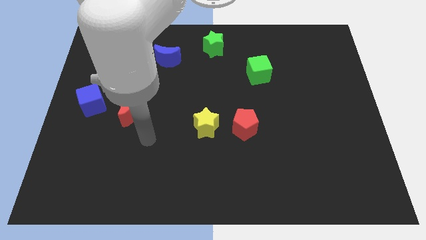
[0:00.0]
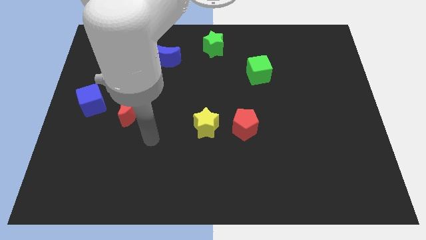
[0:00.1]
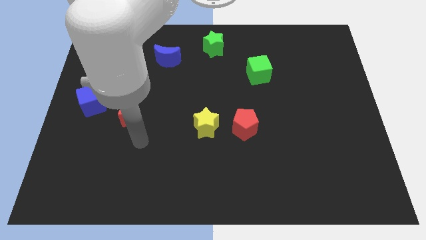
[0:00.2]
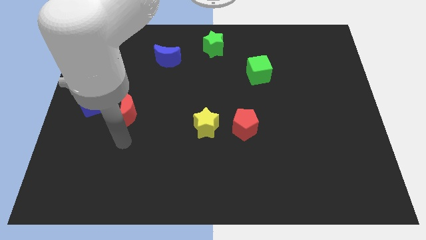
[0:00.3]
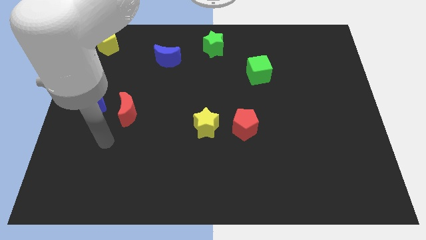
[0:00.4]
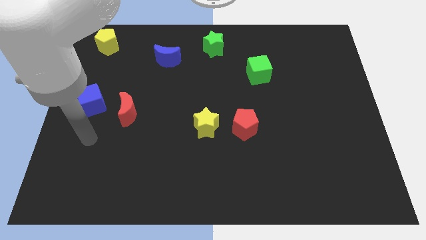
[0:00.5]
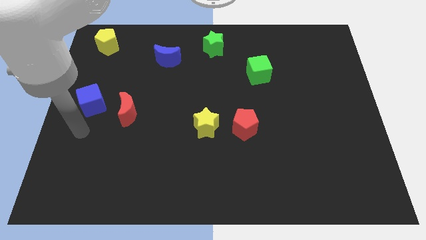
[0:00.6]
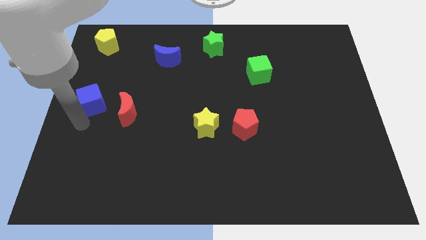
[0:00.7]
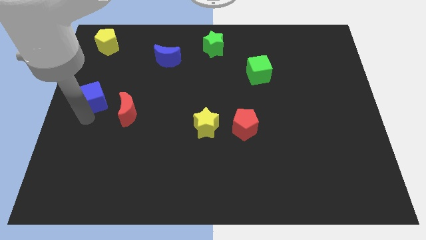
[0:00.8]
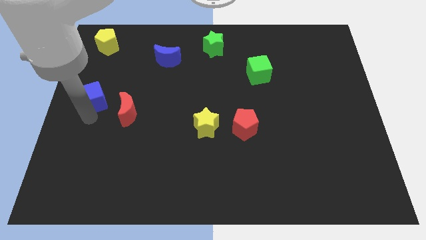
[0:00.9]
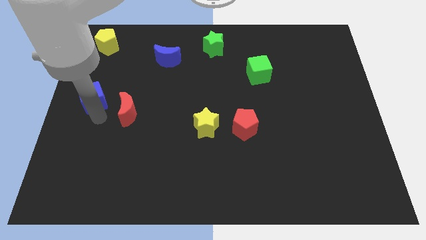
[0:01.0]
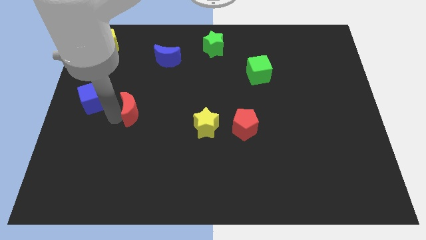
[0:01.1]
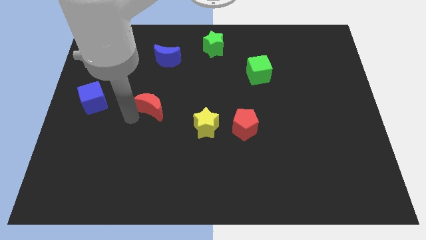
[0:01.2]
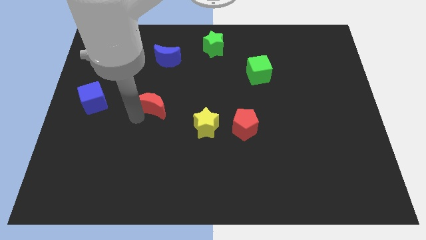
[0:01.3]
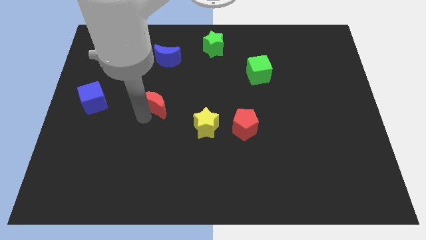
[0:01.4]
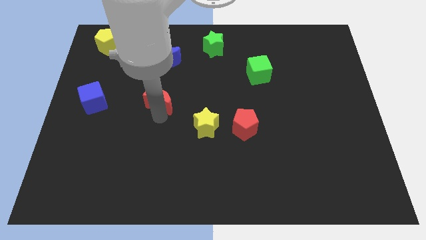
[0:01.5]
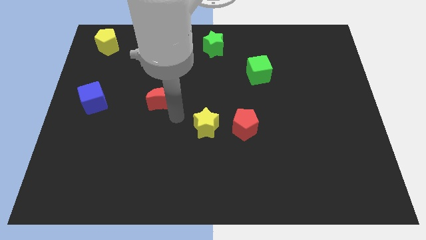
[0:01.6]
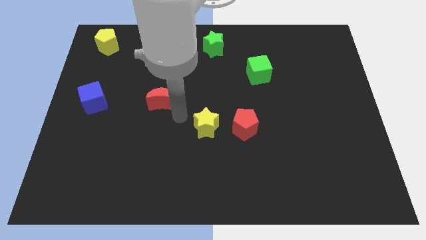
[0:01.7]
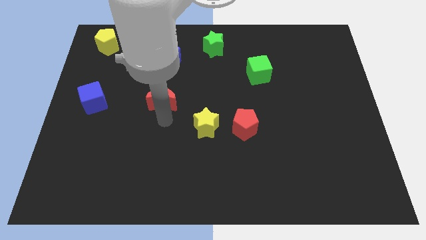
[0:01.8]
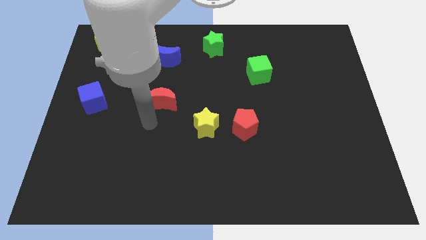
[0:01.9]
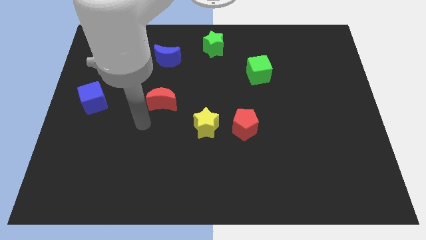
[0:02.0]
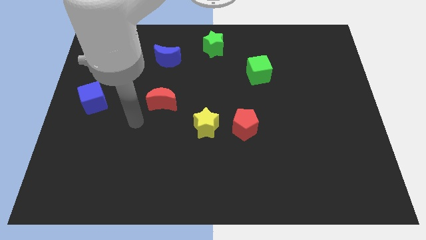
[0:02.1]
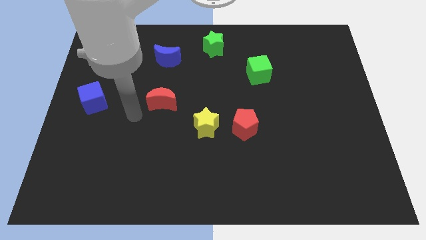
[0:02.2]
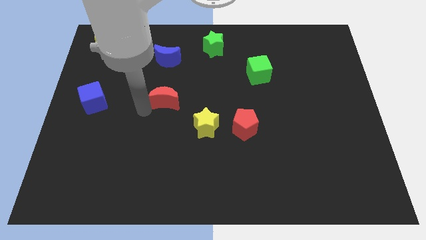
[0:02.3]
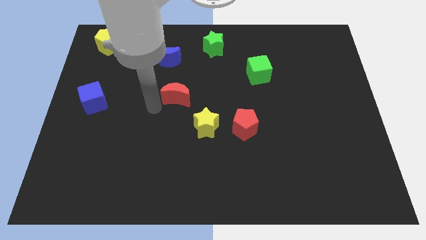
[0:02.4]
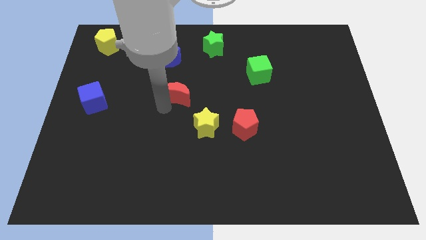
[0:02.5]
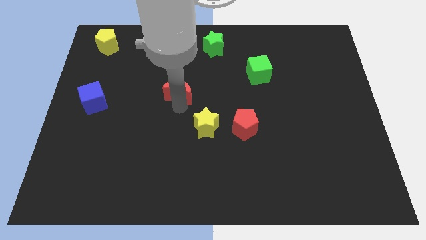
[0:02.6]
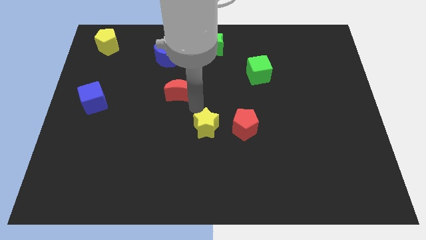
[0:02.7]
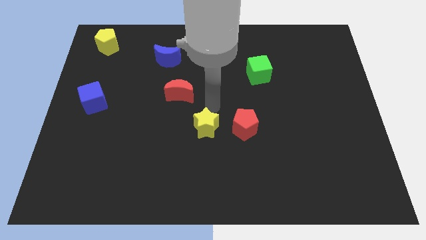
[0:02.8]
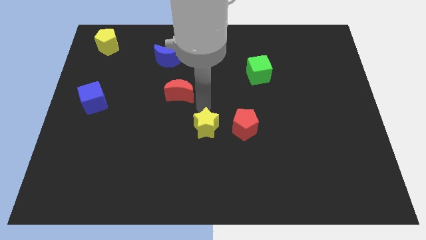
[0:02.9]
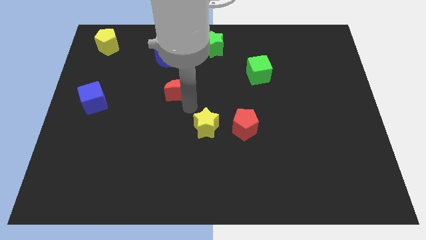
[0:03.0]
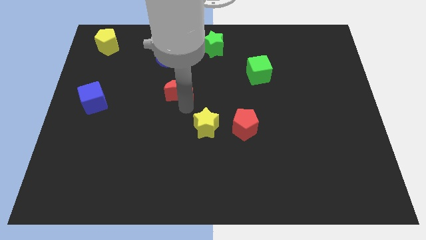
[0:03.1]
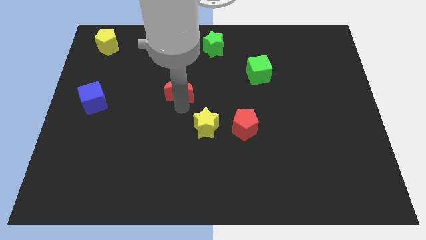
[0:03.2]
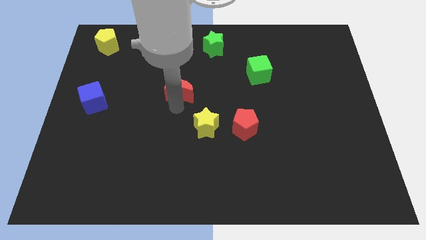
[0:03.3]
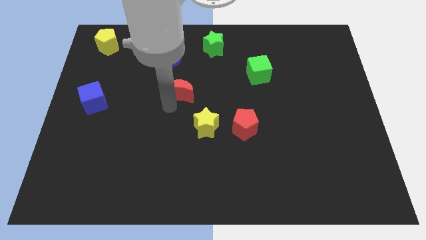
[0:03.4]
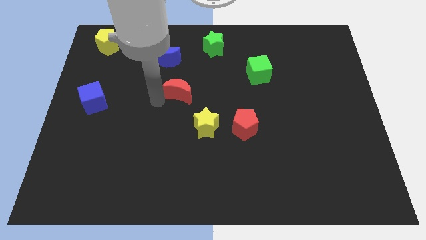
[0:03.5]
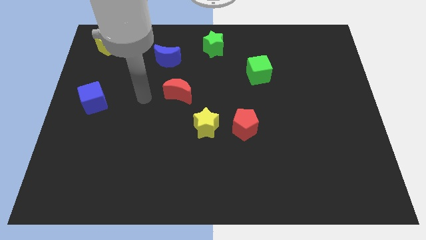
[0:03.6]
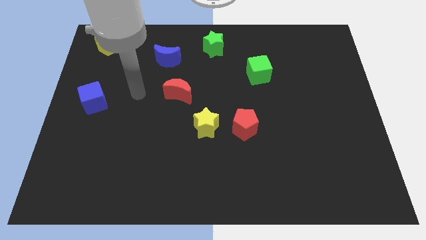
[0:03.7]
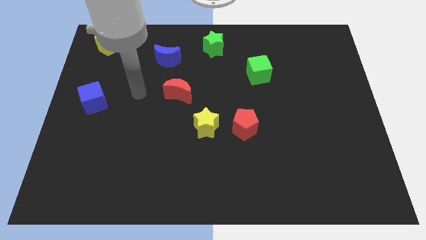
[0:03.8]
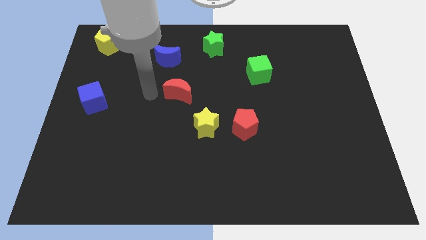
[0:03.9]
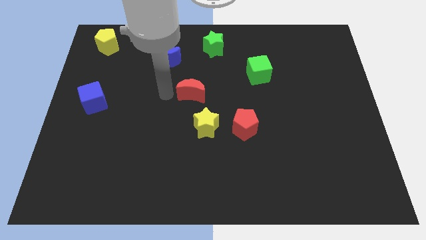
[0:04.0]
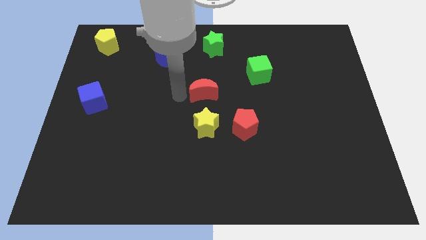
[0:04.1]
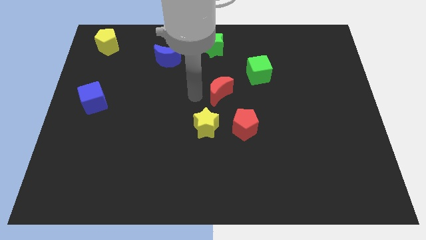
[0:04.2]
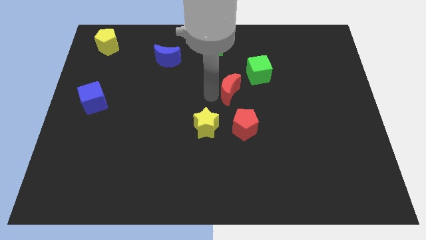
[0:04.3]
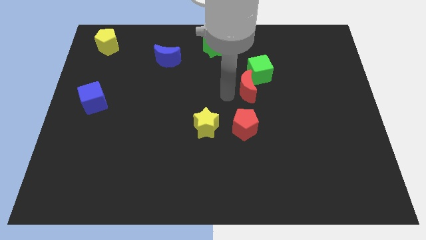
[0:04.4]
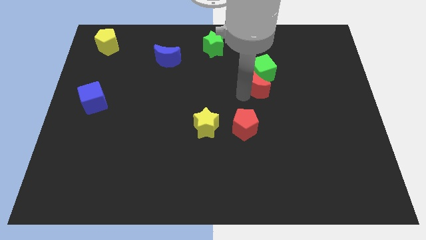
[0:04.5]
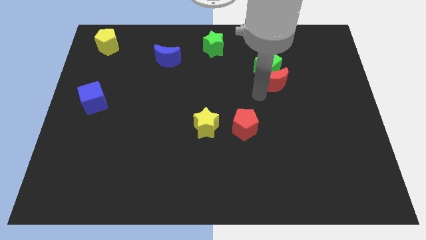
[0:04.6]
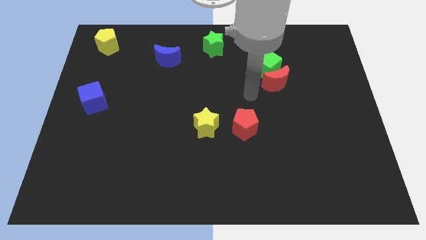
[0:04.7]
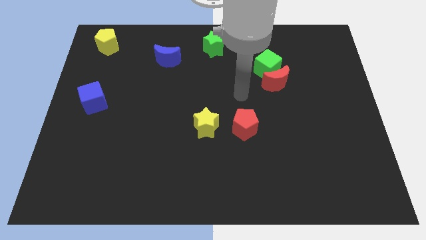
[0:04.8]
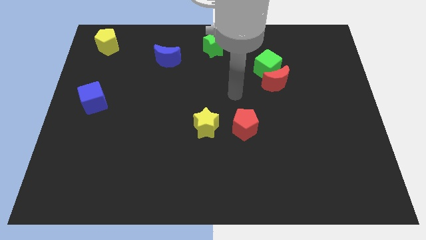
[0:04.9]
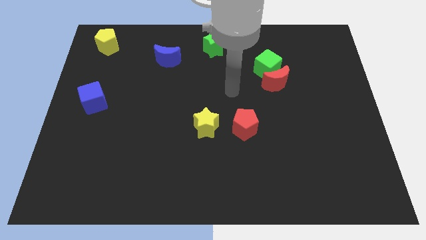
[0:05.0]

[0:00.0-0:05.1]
push the red crescent to the bottom of the green cube touching

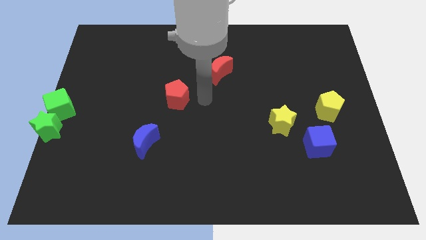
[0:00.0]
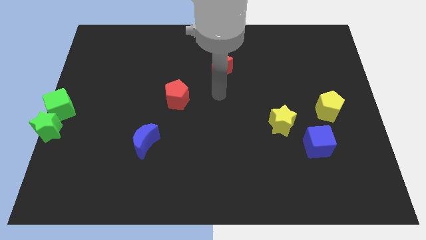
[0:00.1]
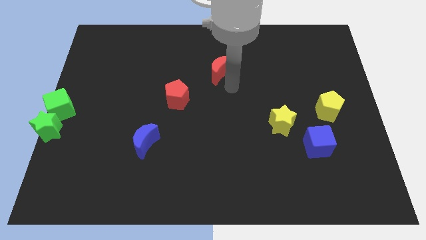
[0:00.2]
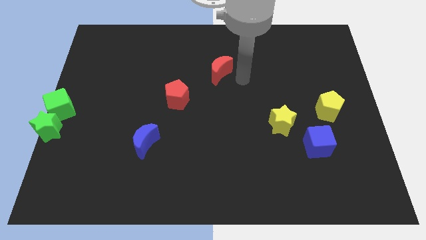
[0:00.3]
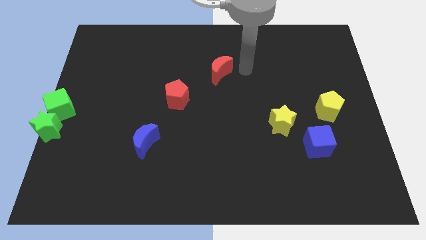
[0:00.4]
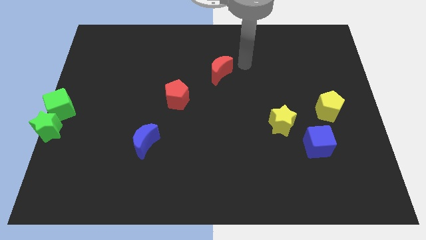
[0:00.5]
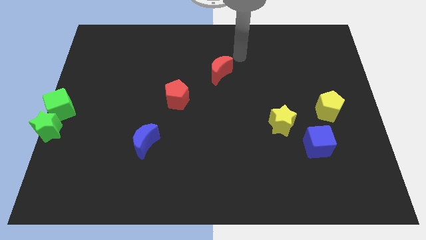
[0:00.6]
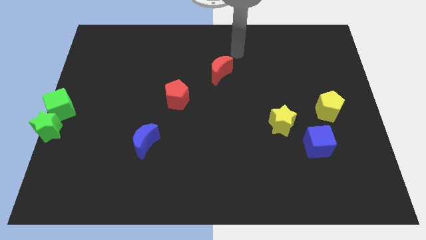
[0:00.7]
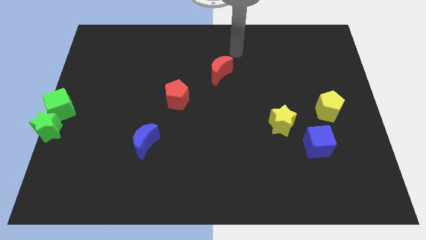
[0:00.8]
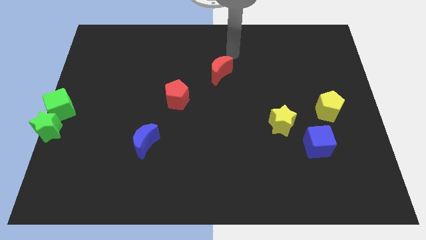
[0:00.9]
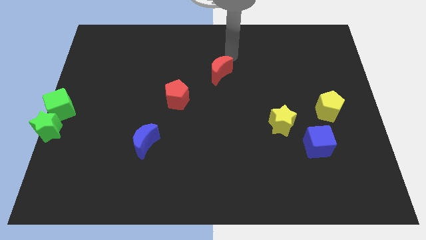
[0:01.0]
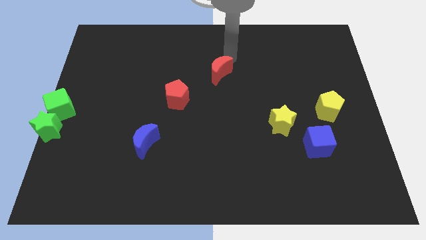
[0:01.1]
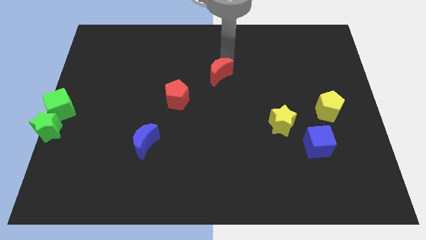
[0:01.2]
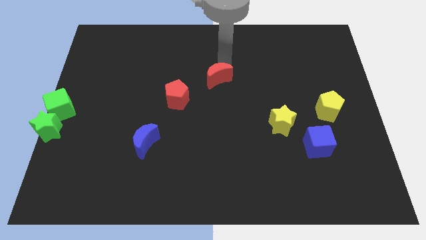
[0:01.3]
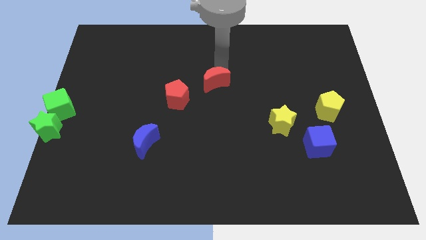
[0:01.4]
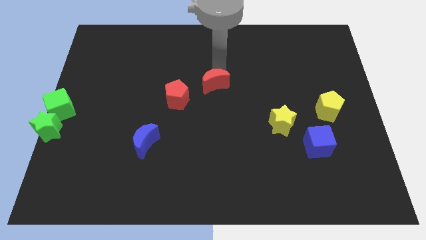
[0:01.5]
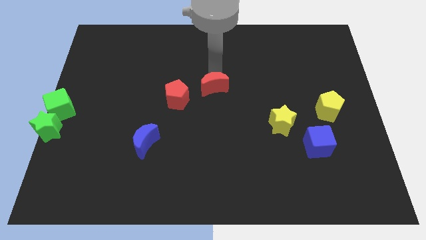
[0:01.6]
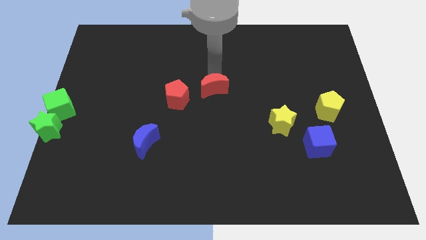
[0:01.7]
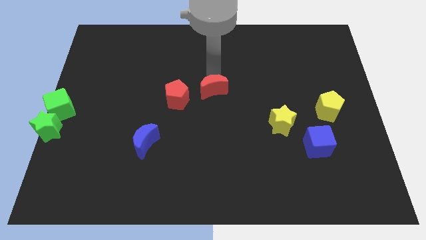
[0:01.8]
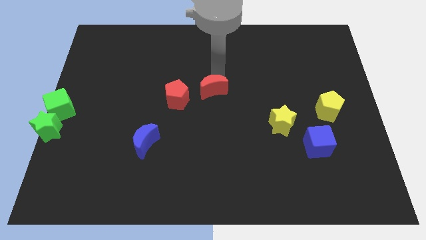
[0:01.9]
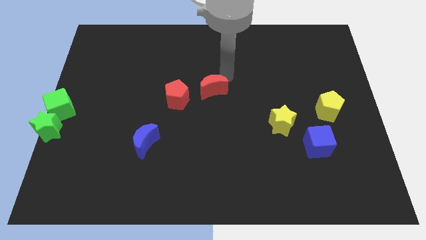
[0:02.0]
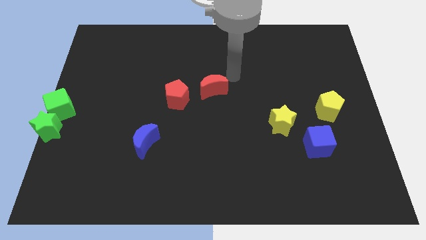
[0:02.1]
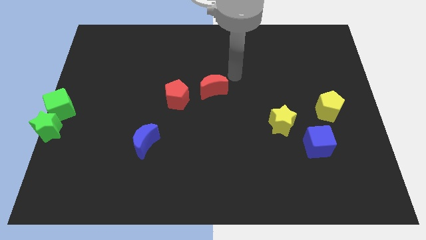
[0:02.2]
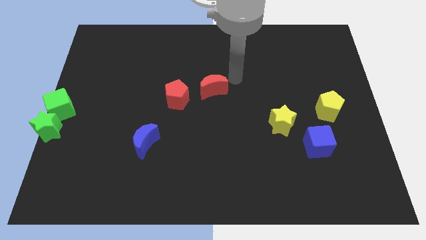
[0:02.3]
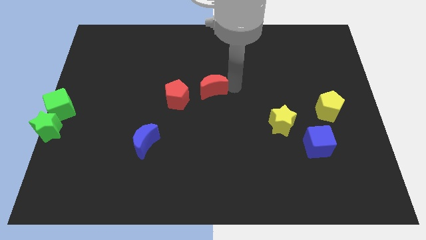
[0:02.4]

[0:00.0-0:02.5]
push the red crescent to the right side of the red pentagon

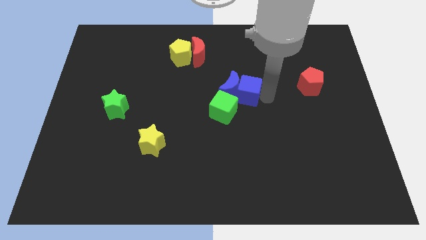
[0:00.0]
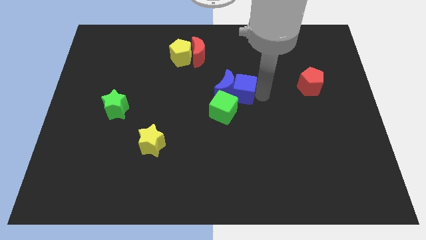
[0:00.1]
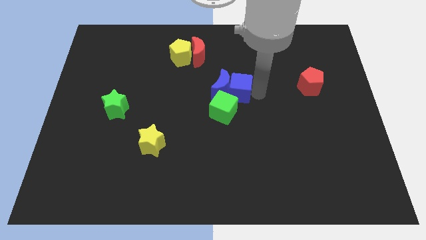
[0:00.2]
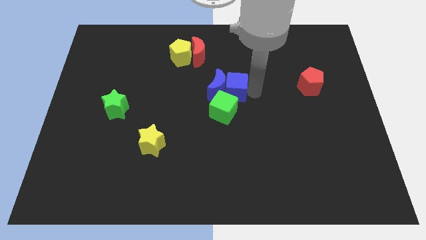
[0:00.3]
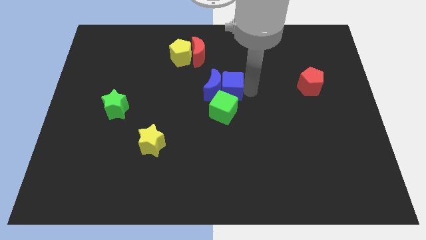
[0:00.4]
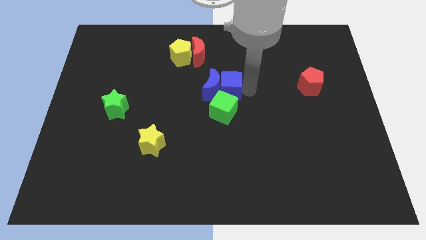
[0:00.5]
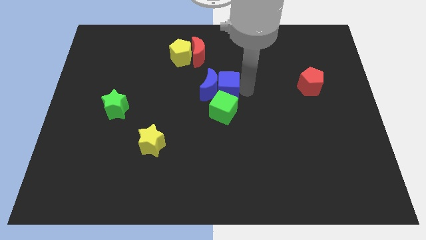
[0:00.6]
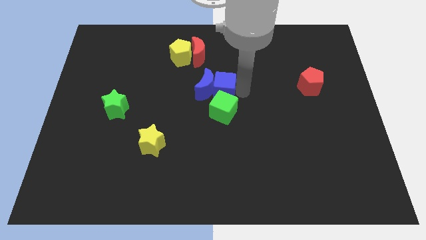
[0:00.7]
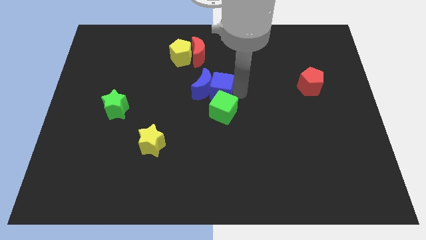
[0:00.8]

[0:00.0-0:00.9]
move blue cube above green cube

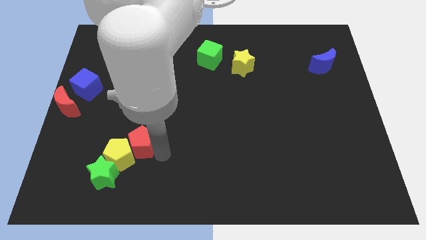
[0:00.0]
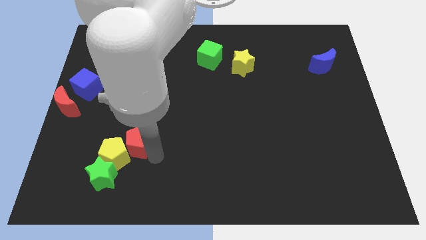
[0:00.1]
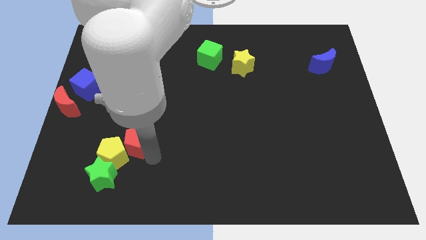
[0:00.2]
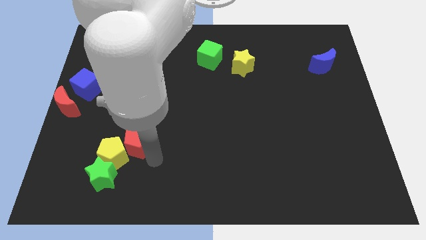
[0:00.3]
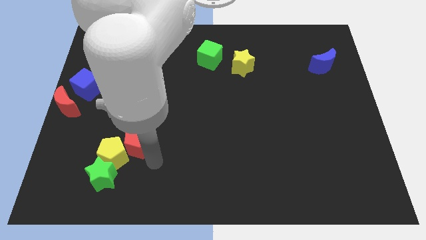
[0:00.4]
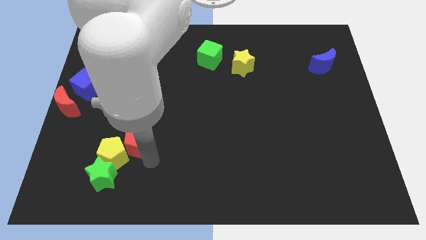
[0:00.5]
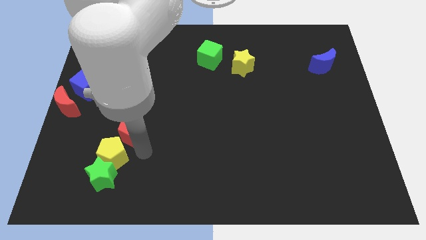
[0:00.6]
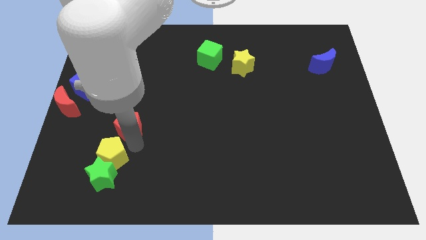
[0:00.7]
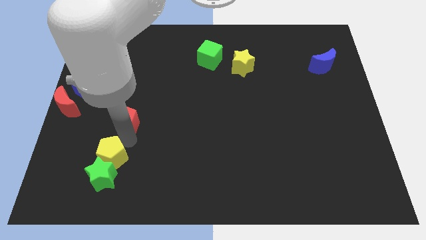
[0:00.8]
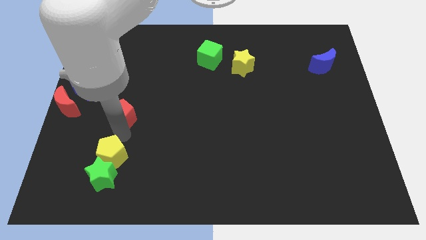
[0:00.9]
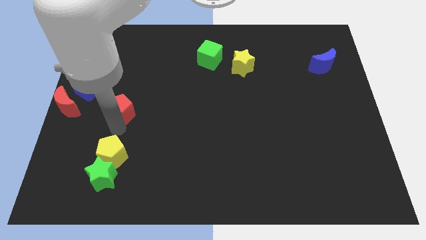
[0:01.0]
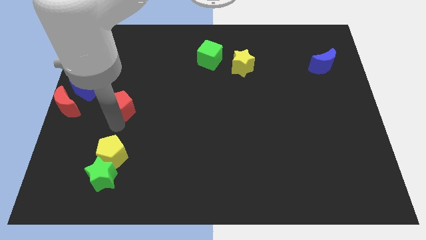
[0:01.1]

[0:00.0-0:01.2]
move the red pentagon to the bottom right of the blue crescent
